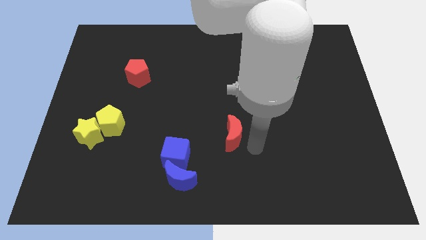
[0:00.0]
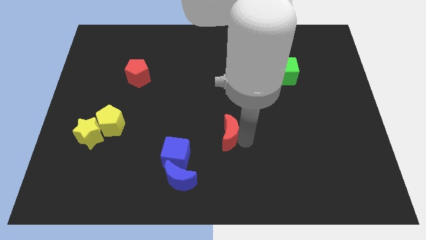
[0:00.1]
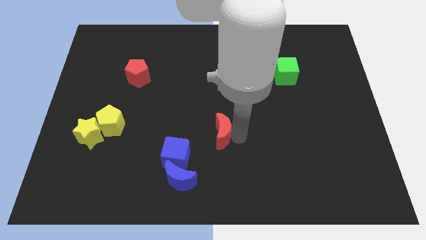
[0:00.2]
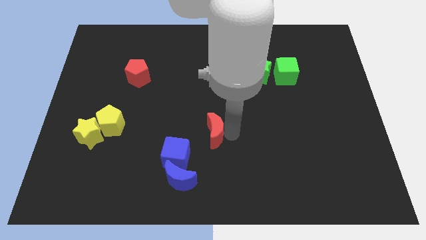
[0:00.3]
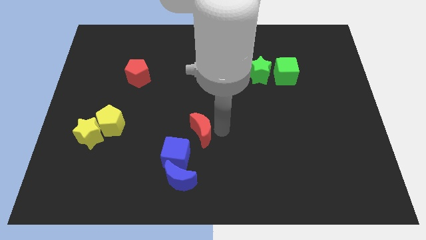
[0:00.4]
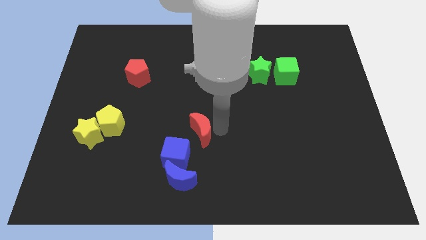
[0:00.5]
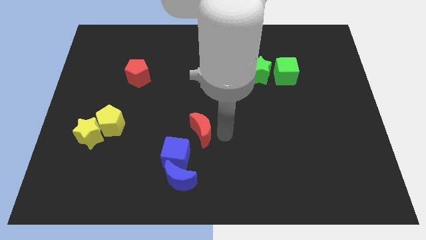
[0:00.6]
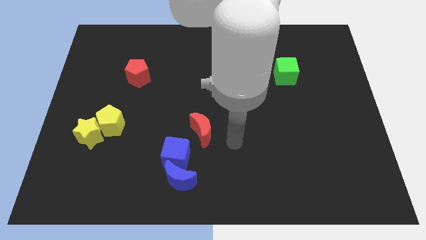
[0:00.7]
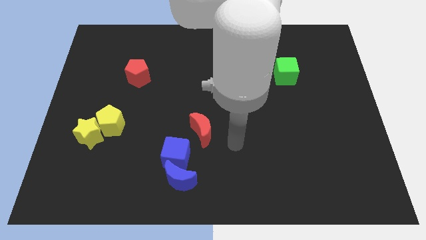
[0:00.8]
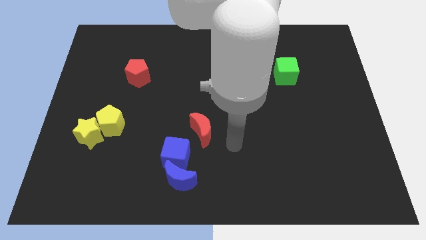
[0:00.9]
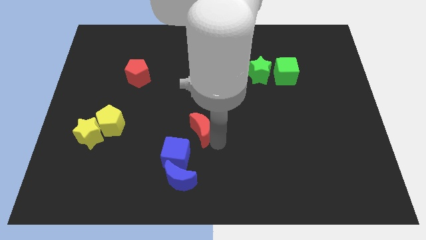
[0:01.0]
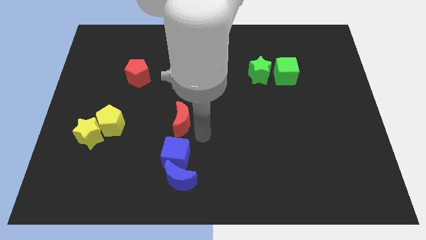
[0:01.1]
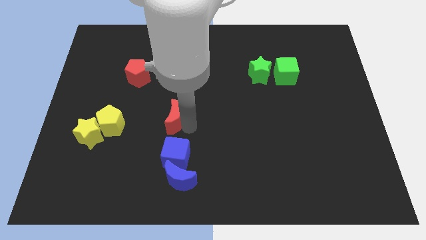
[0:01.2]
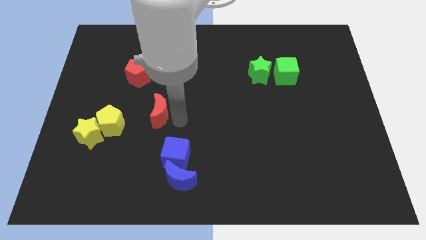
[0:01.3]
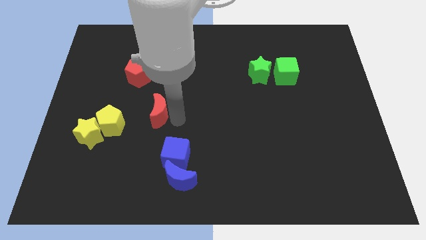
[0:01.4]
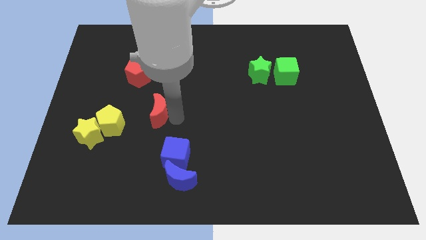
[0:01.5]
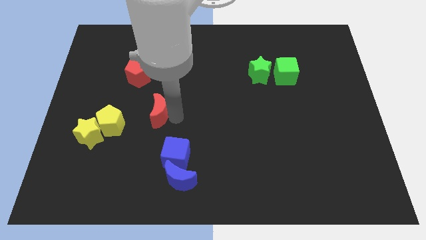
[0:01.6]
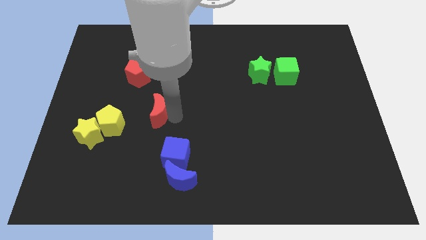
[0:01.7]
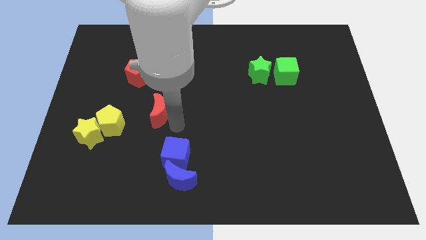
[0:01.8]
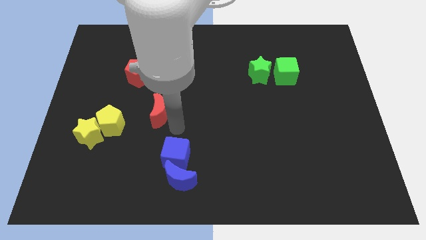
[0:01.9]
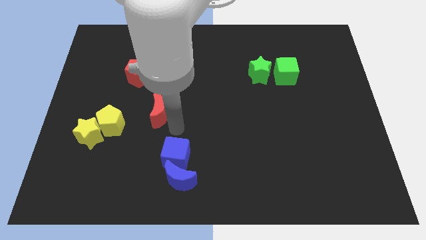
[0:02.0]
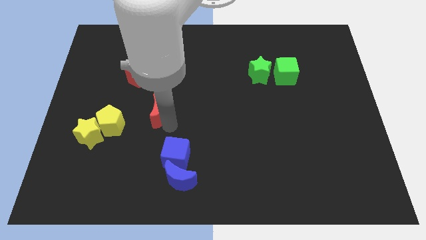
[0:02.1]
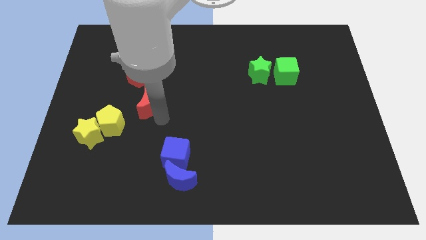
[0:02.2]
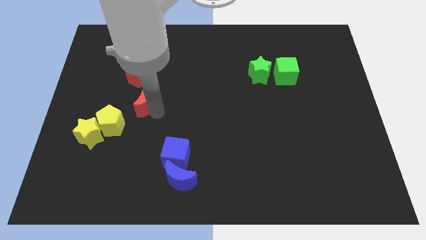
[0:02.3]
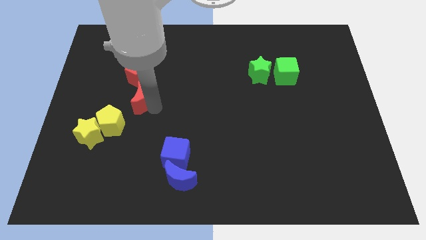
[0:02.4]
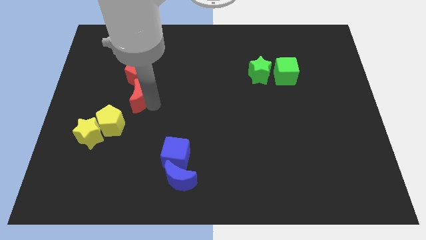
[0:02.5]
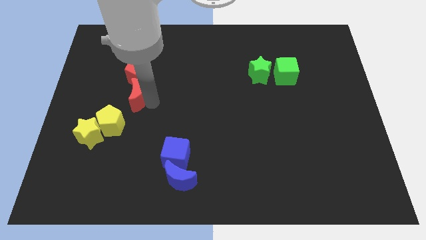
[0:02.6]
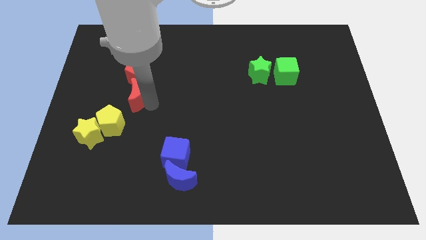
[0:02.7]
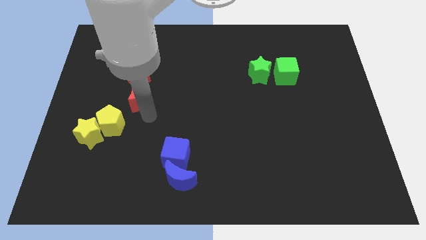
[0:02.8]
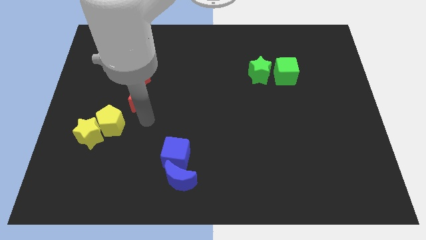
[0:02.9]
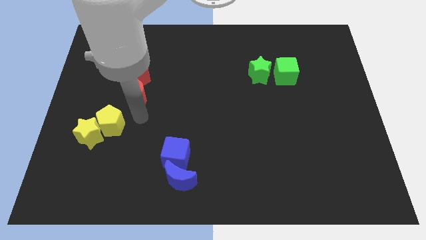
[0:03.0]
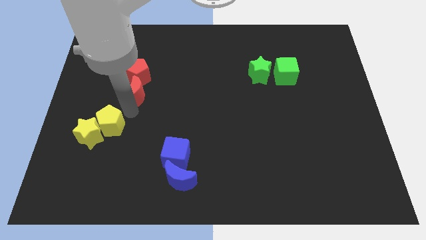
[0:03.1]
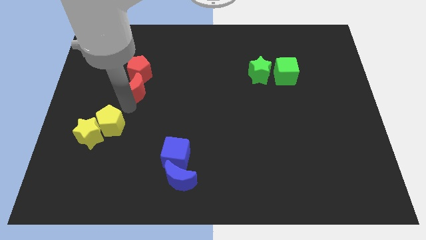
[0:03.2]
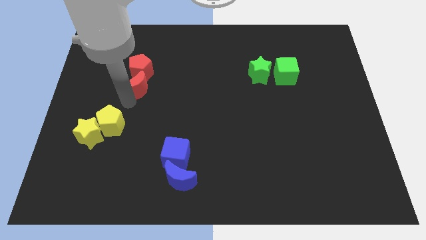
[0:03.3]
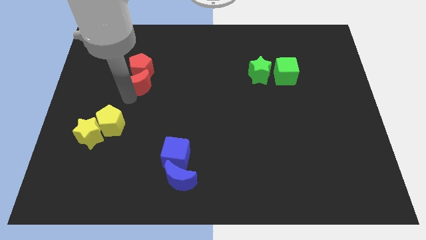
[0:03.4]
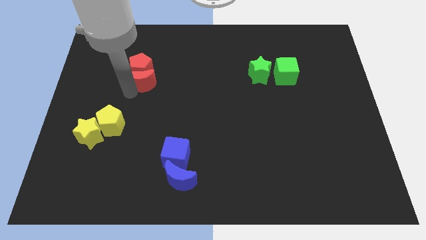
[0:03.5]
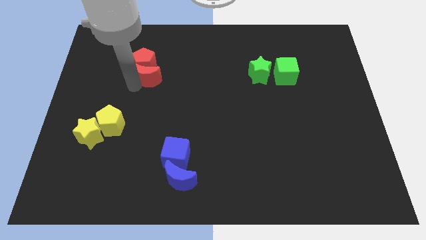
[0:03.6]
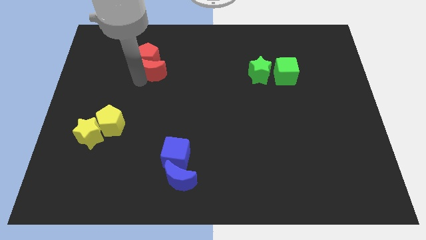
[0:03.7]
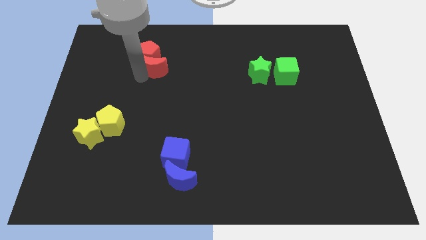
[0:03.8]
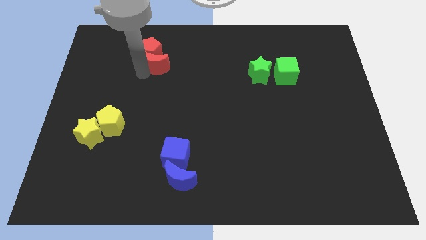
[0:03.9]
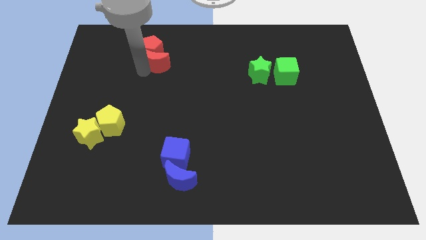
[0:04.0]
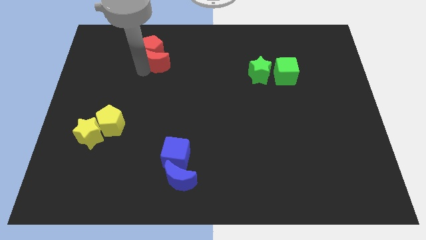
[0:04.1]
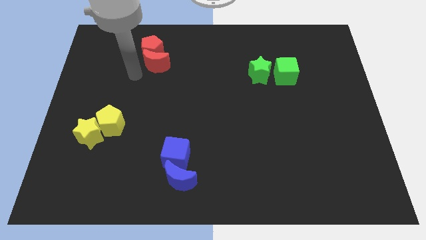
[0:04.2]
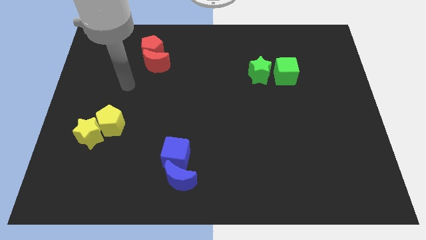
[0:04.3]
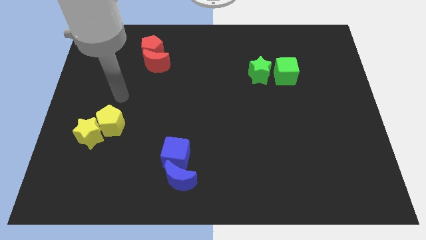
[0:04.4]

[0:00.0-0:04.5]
push the red moon into red pentagon

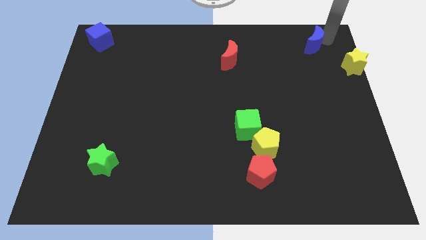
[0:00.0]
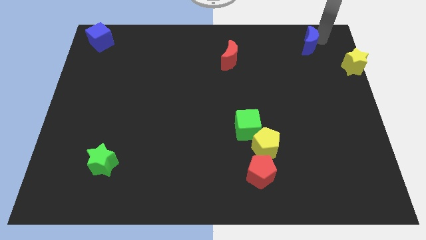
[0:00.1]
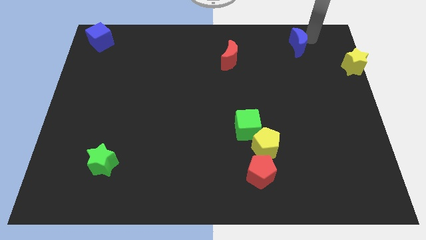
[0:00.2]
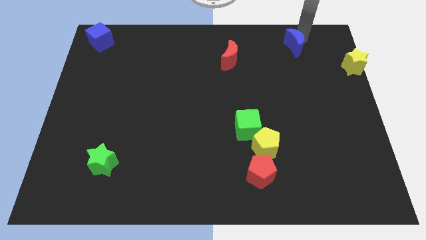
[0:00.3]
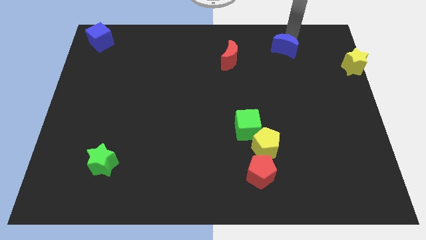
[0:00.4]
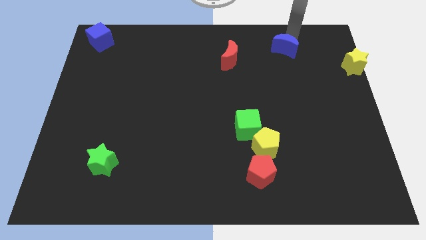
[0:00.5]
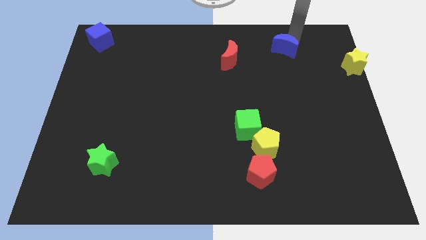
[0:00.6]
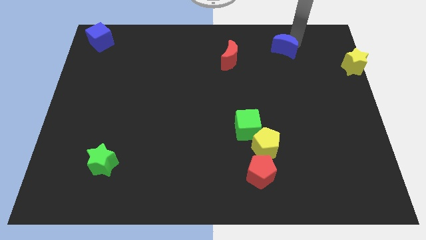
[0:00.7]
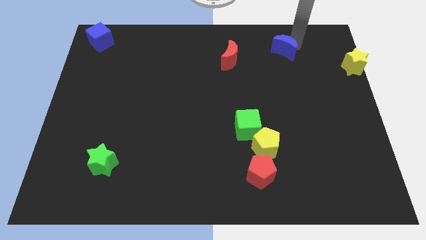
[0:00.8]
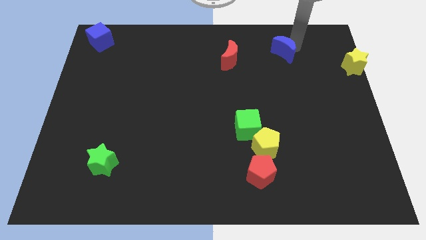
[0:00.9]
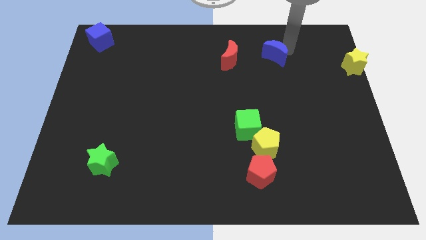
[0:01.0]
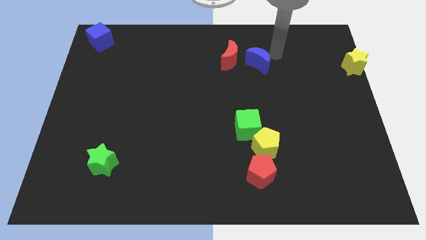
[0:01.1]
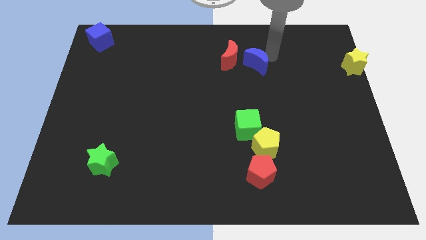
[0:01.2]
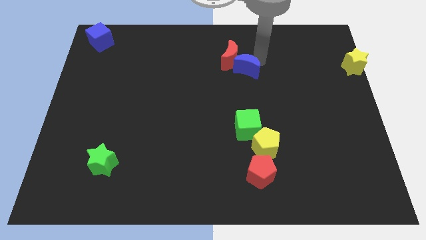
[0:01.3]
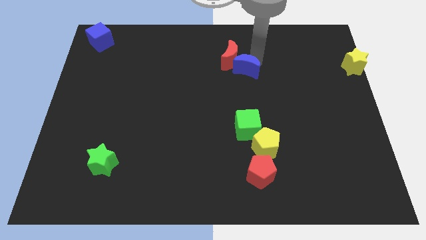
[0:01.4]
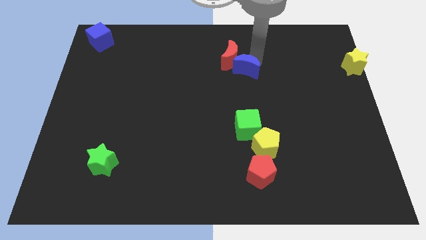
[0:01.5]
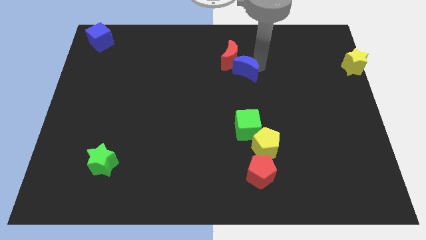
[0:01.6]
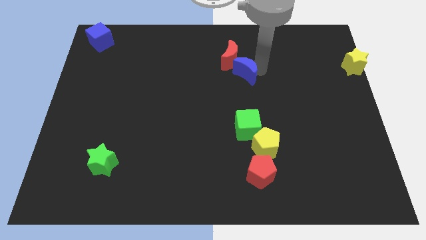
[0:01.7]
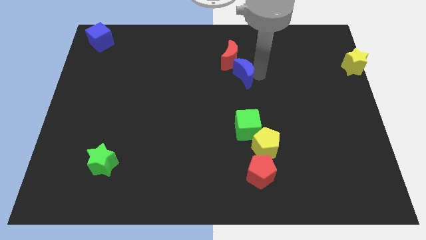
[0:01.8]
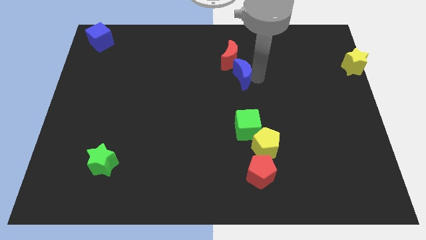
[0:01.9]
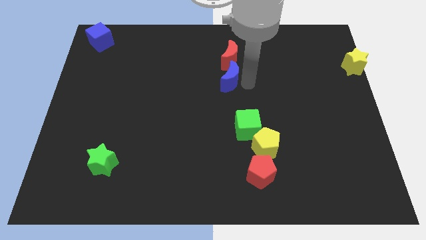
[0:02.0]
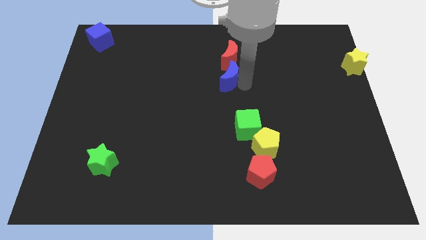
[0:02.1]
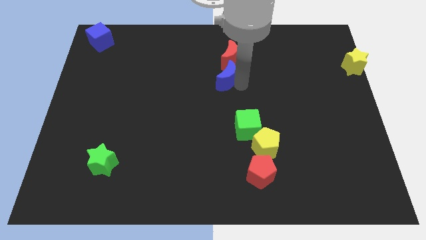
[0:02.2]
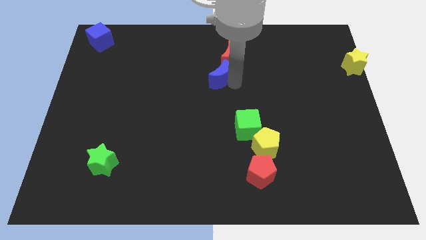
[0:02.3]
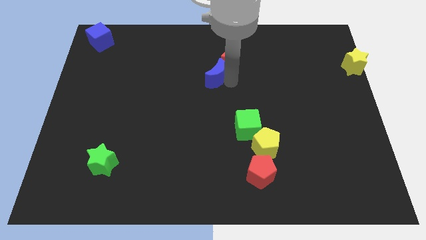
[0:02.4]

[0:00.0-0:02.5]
place blue crescent near the red crescent

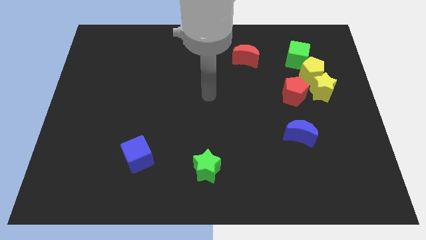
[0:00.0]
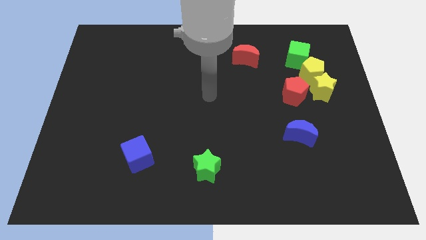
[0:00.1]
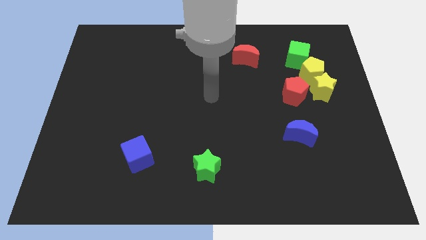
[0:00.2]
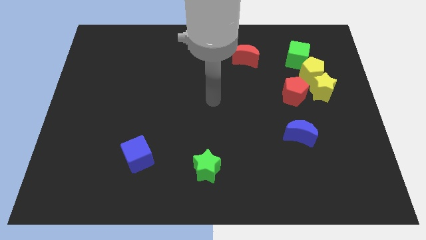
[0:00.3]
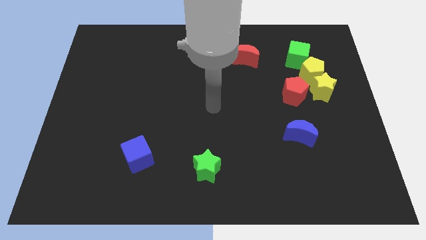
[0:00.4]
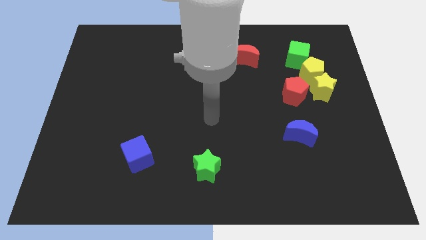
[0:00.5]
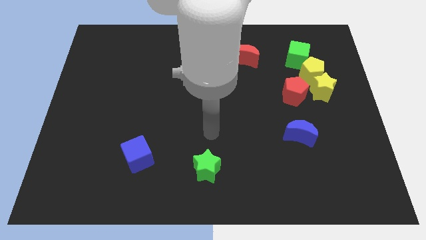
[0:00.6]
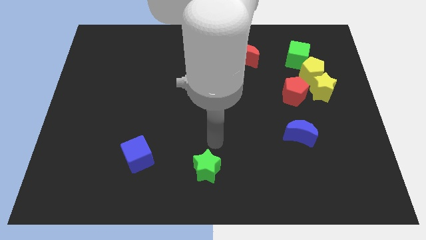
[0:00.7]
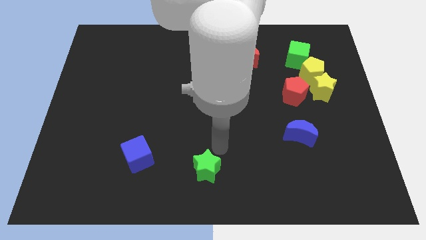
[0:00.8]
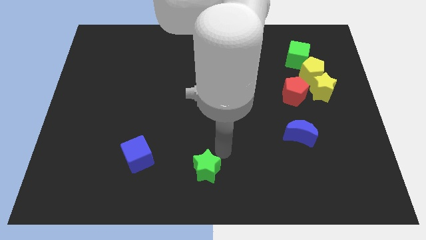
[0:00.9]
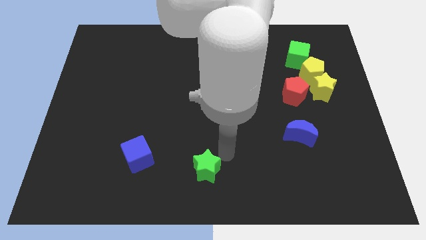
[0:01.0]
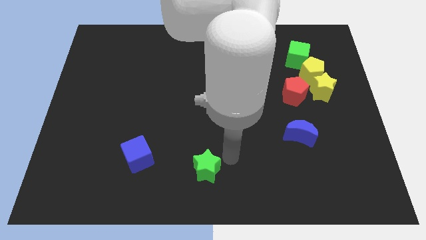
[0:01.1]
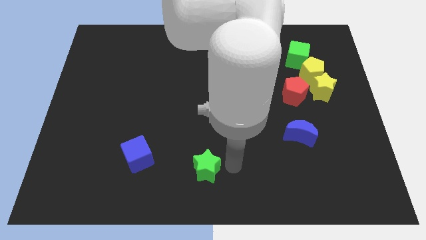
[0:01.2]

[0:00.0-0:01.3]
place the arm at the right side of the green star

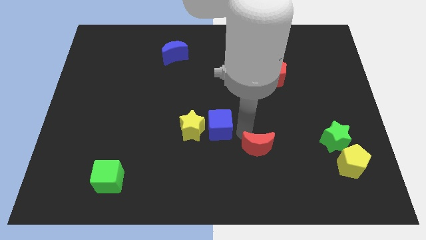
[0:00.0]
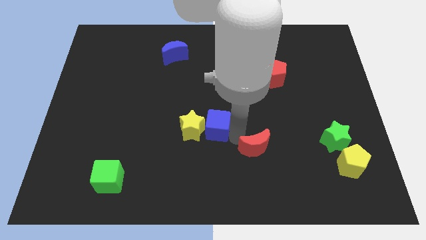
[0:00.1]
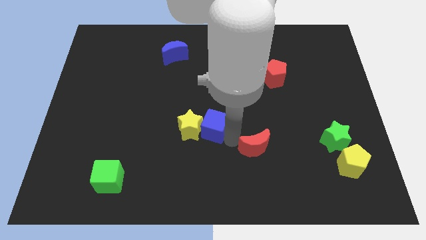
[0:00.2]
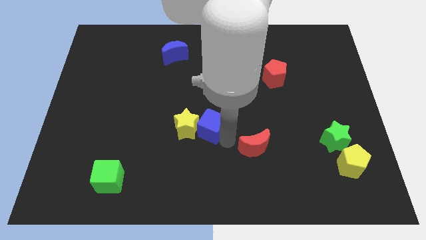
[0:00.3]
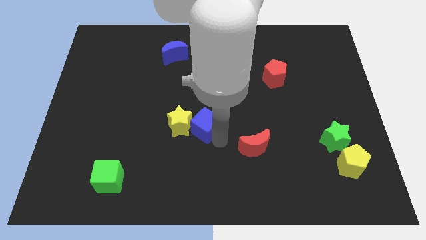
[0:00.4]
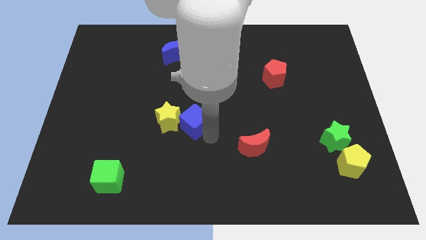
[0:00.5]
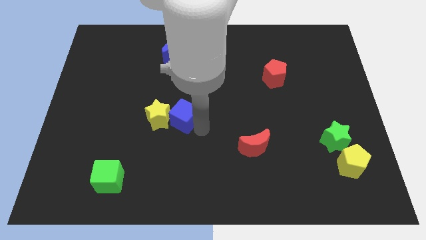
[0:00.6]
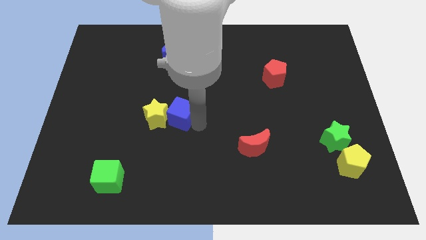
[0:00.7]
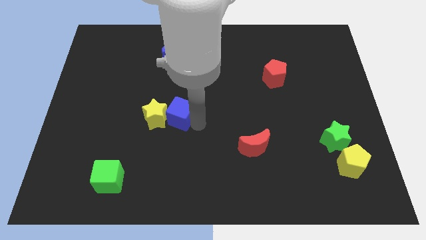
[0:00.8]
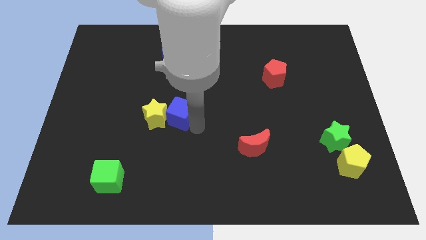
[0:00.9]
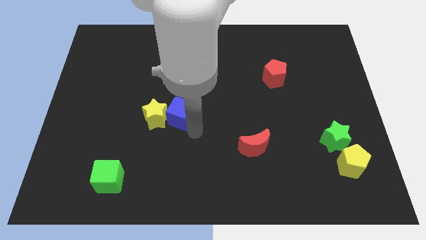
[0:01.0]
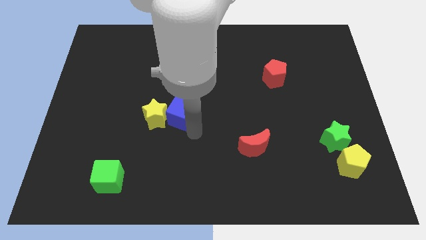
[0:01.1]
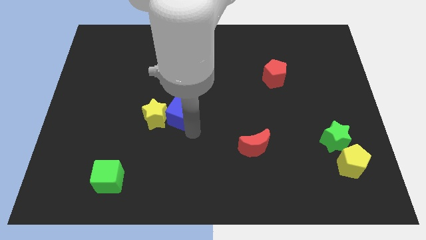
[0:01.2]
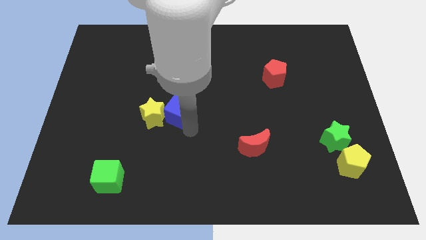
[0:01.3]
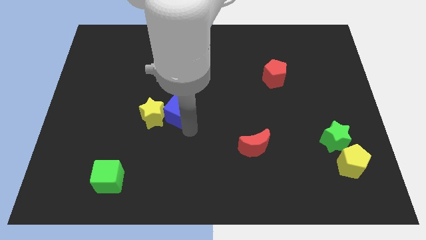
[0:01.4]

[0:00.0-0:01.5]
push the blue cube into the yellow star
